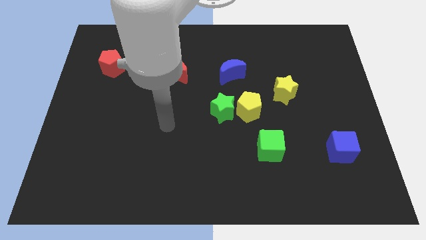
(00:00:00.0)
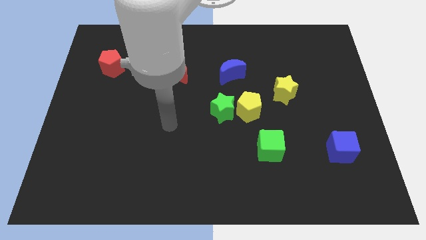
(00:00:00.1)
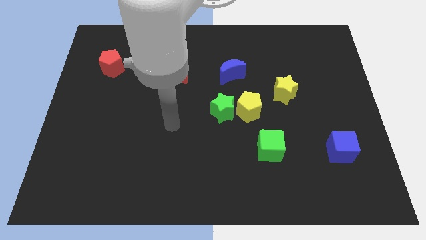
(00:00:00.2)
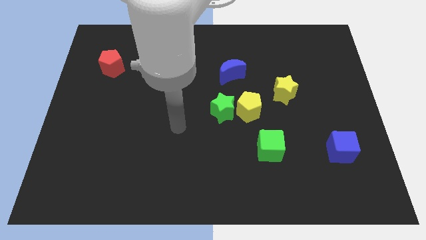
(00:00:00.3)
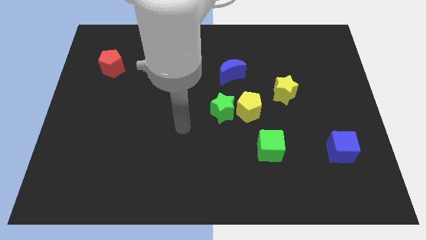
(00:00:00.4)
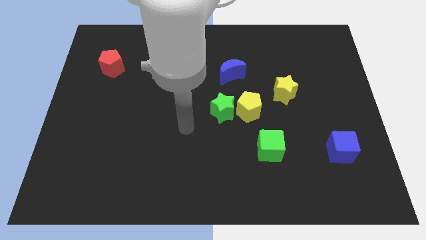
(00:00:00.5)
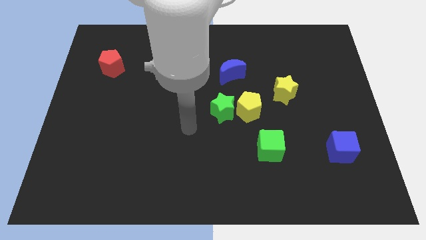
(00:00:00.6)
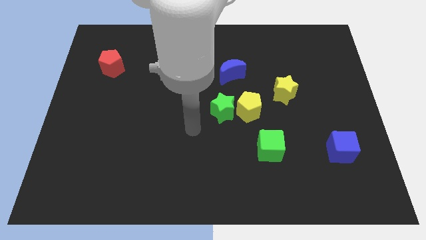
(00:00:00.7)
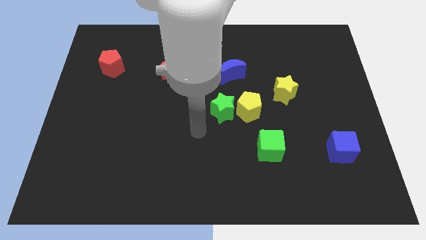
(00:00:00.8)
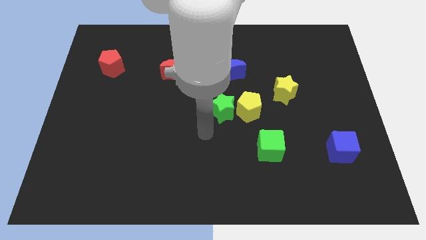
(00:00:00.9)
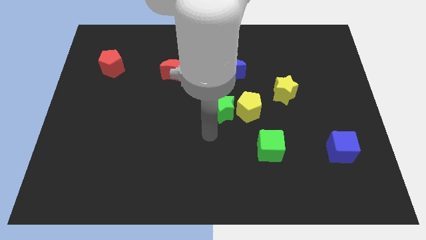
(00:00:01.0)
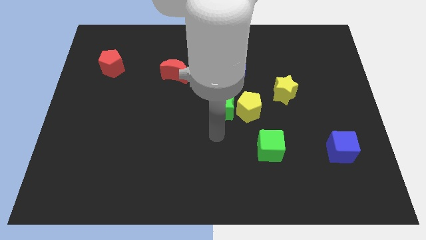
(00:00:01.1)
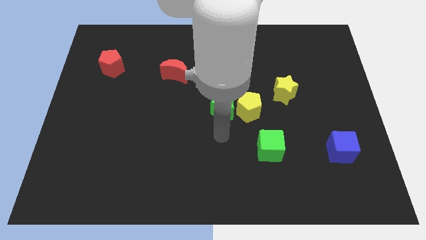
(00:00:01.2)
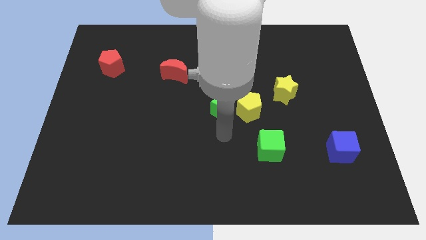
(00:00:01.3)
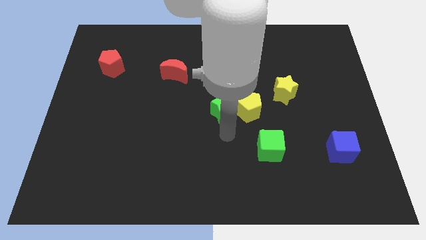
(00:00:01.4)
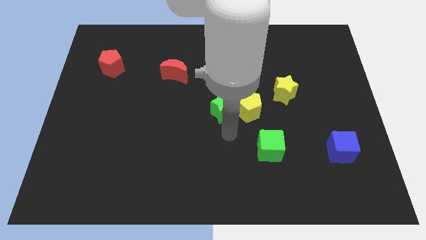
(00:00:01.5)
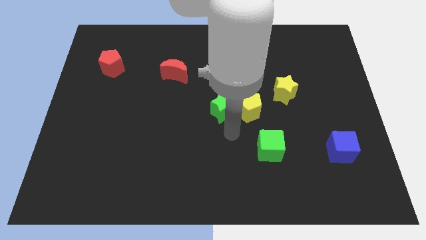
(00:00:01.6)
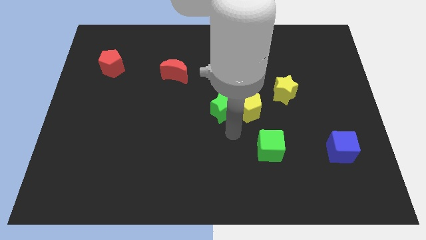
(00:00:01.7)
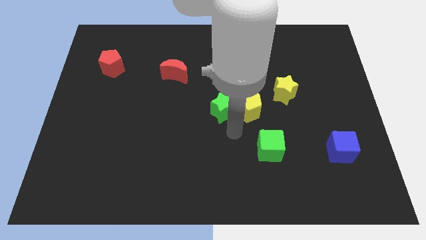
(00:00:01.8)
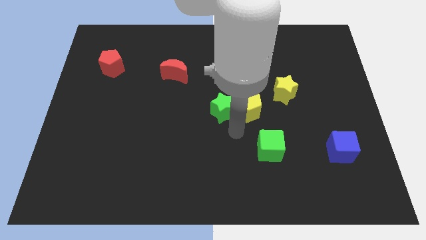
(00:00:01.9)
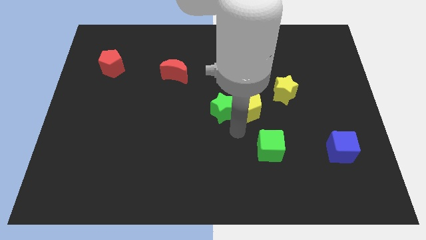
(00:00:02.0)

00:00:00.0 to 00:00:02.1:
move your arm to the bottom of the yellow pentagon

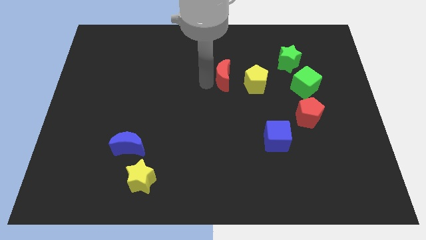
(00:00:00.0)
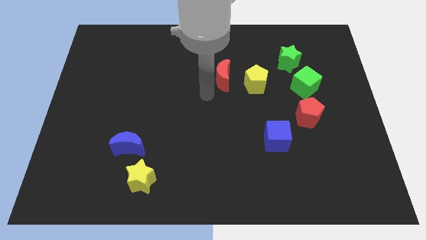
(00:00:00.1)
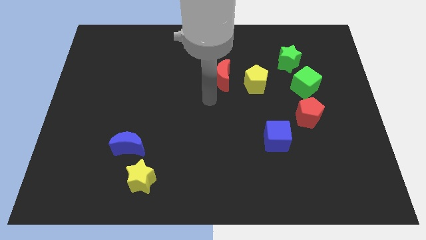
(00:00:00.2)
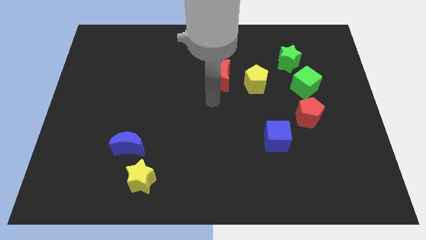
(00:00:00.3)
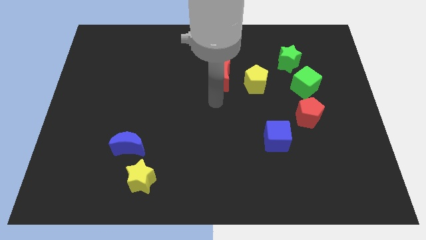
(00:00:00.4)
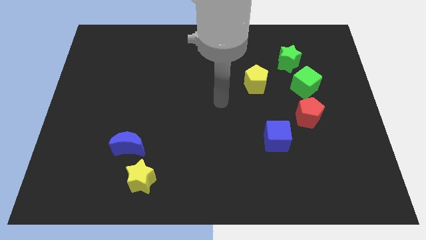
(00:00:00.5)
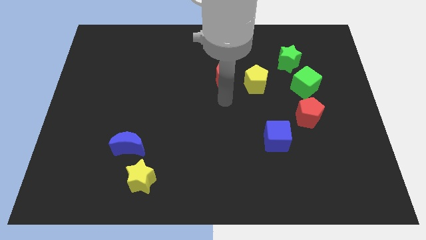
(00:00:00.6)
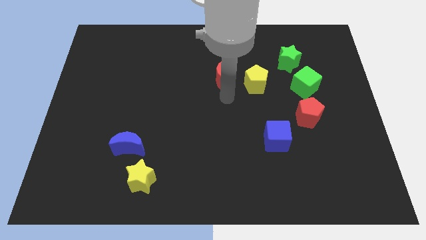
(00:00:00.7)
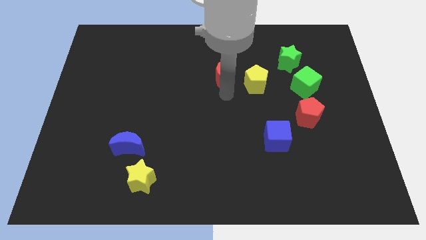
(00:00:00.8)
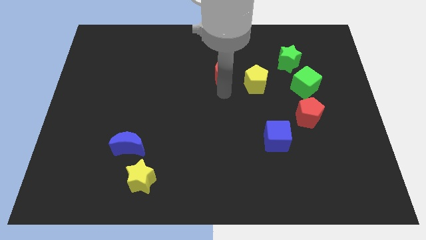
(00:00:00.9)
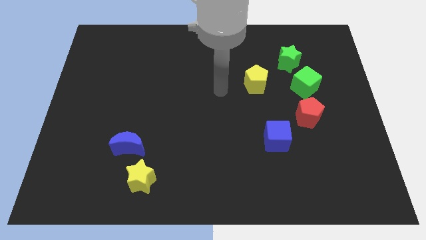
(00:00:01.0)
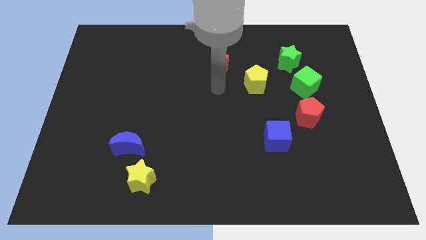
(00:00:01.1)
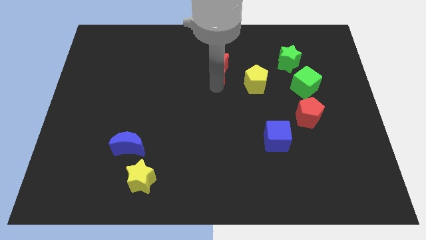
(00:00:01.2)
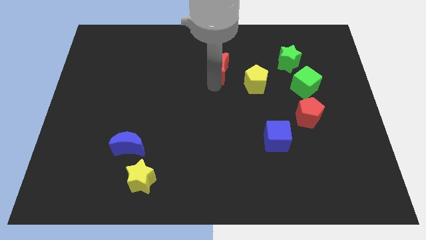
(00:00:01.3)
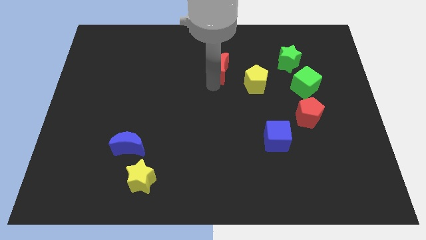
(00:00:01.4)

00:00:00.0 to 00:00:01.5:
slightly move the red crescent diagonal to the left of the green star

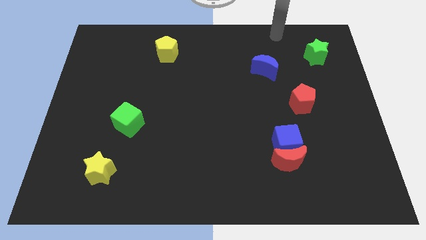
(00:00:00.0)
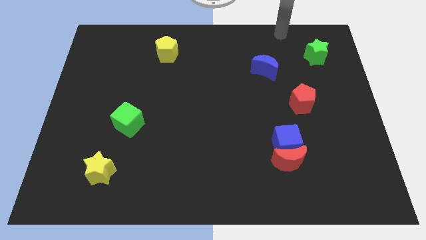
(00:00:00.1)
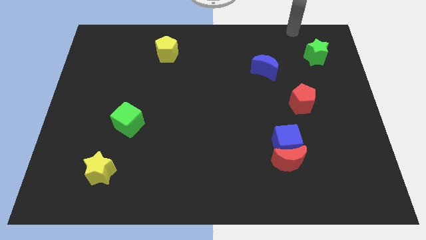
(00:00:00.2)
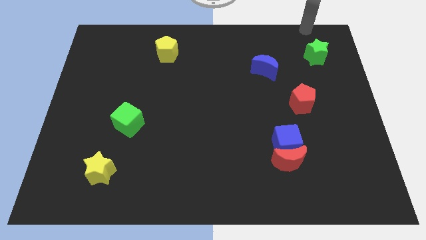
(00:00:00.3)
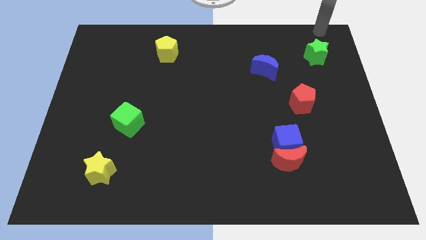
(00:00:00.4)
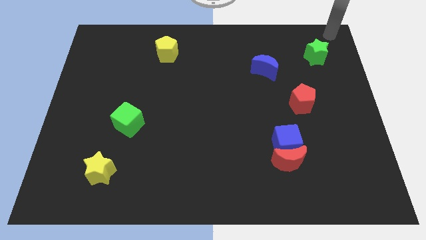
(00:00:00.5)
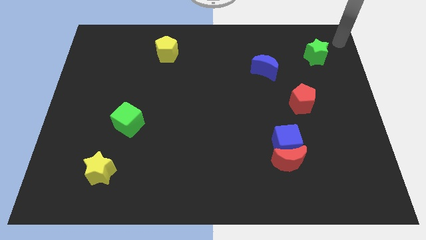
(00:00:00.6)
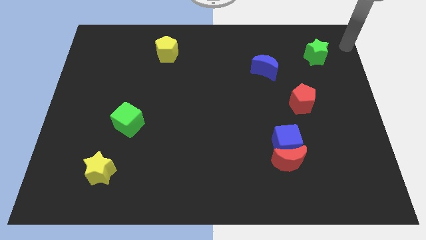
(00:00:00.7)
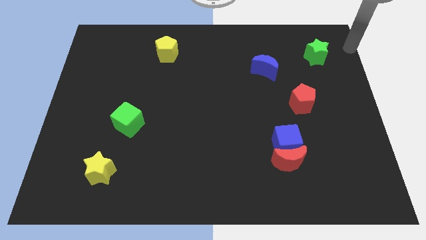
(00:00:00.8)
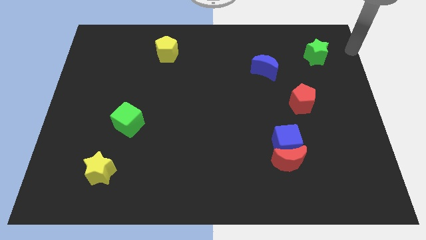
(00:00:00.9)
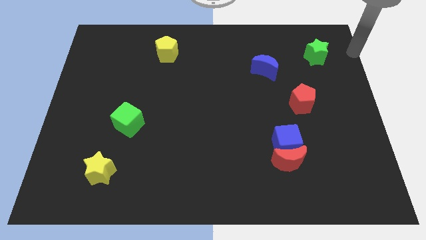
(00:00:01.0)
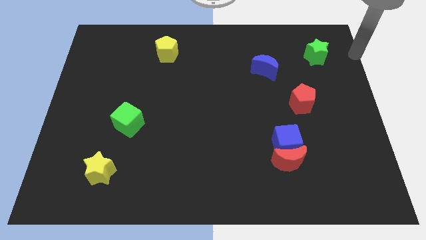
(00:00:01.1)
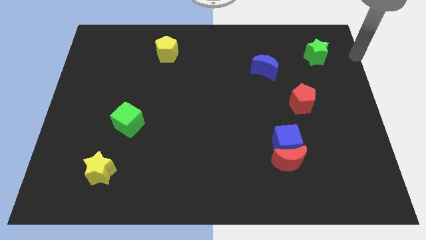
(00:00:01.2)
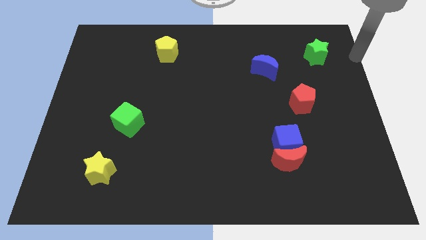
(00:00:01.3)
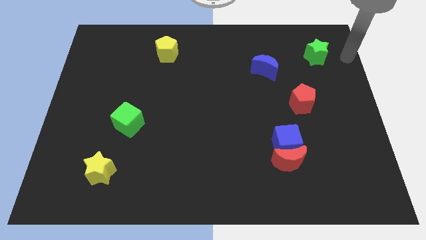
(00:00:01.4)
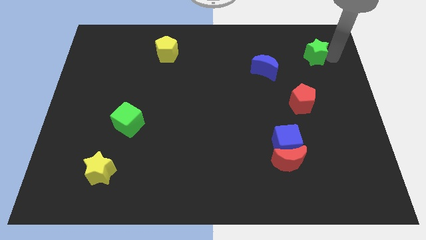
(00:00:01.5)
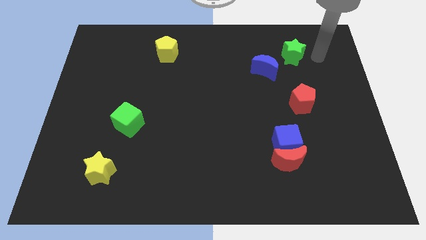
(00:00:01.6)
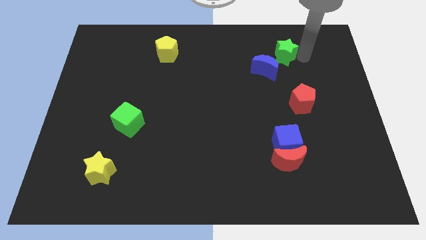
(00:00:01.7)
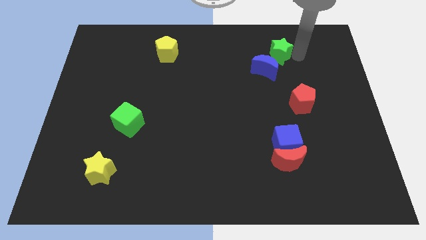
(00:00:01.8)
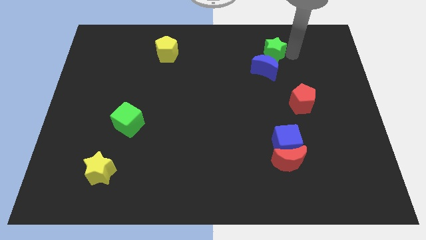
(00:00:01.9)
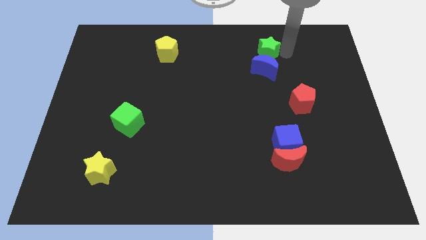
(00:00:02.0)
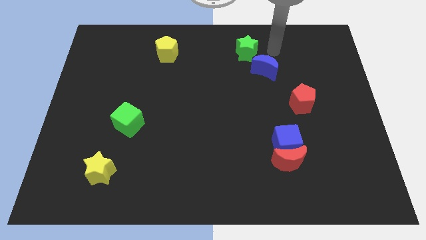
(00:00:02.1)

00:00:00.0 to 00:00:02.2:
move the green star to the top of the blue crescent

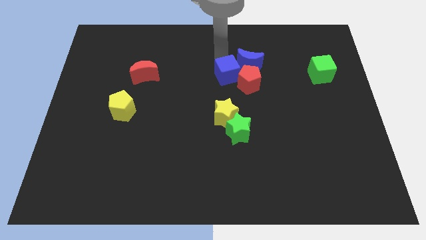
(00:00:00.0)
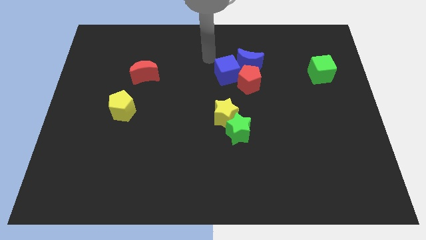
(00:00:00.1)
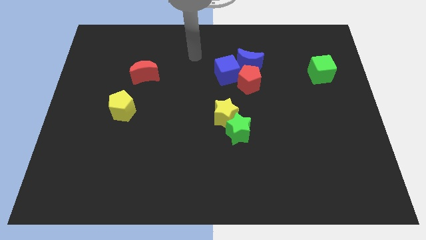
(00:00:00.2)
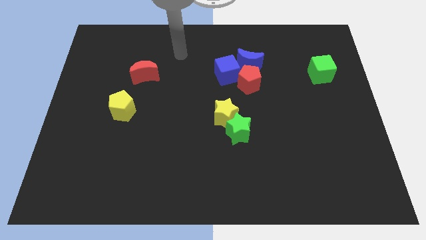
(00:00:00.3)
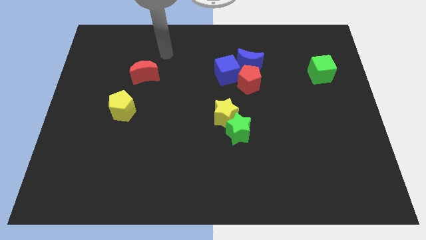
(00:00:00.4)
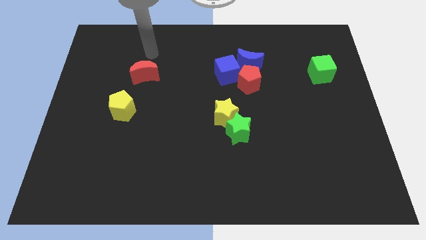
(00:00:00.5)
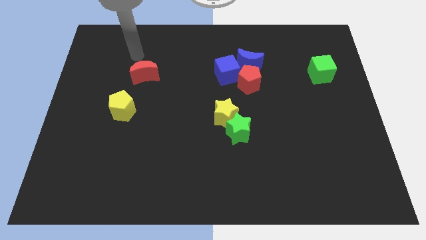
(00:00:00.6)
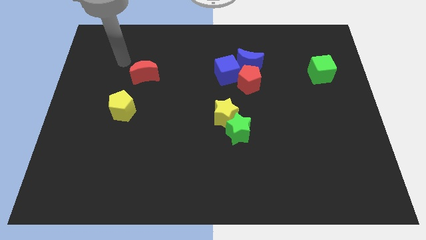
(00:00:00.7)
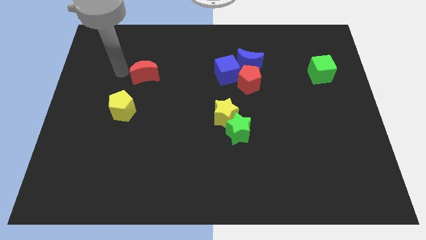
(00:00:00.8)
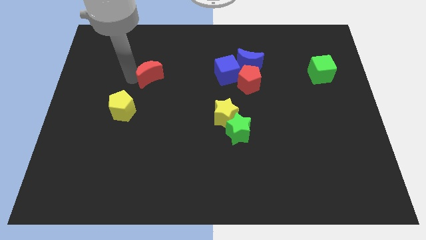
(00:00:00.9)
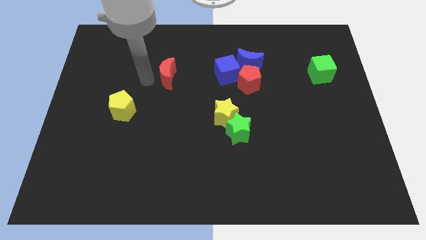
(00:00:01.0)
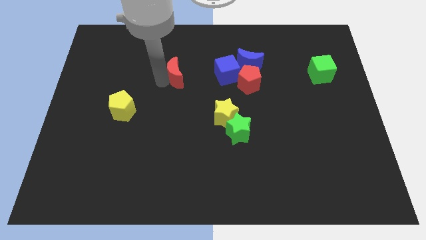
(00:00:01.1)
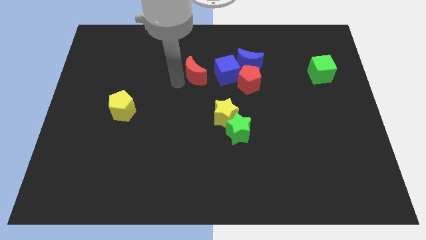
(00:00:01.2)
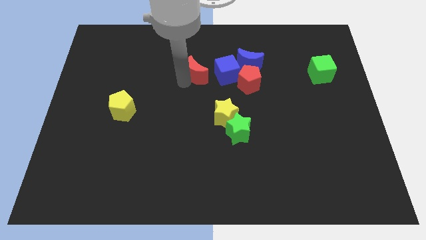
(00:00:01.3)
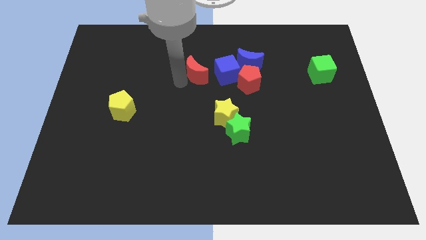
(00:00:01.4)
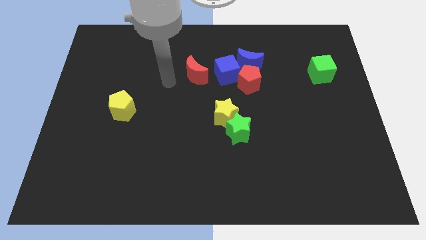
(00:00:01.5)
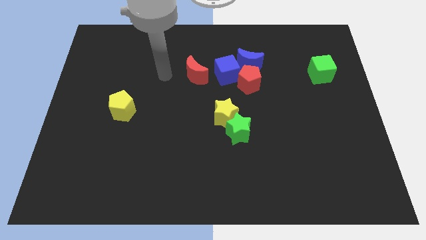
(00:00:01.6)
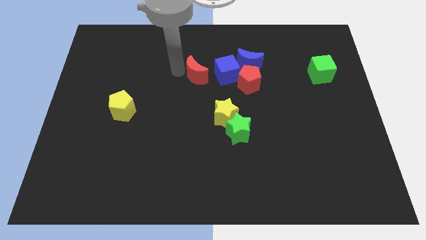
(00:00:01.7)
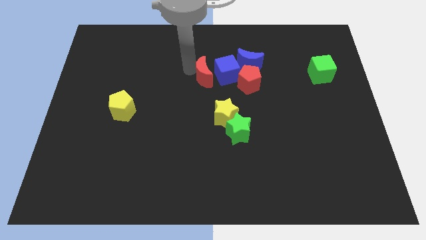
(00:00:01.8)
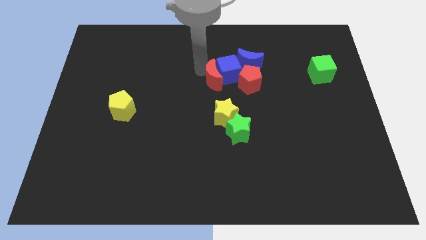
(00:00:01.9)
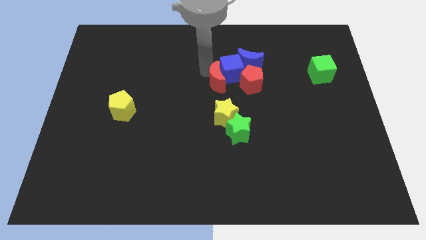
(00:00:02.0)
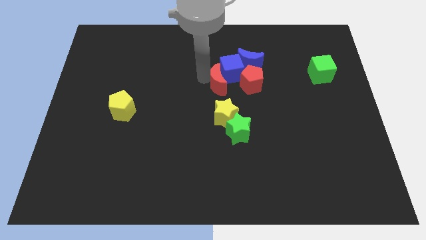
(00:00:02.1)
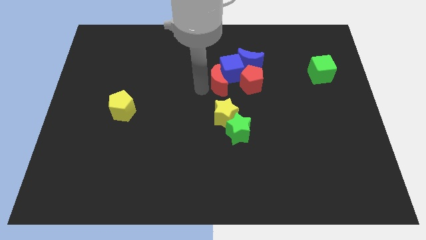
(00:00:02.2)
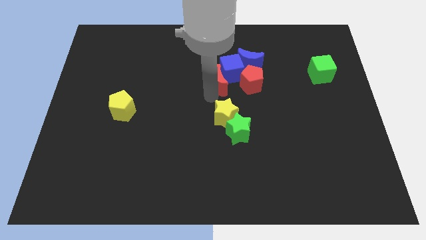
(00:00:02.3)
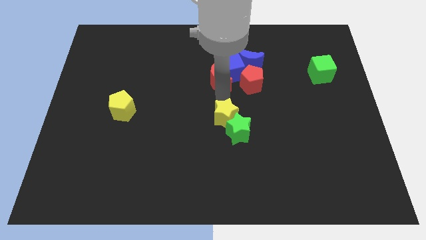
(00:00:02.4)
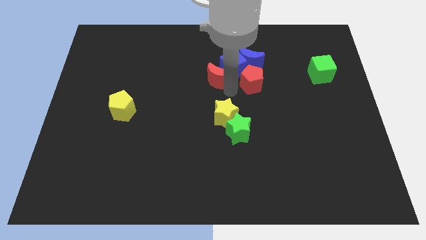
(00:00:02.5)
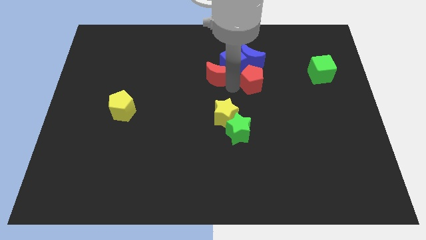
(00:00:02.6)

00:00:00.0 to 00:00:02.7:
push the red crescent into the group of blocks

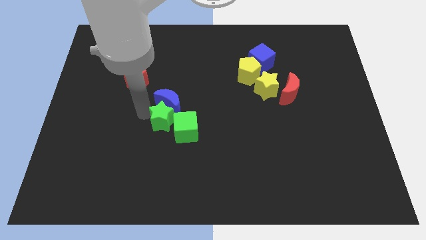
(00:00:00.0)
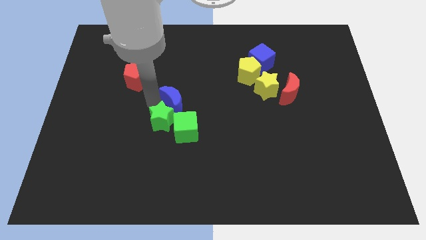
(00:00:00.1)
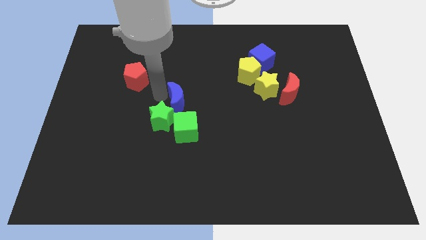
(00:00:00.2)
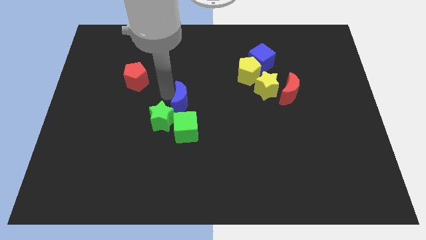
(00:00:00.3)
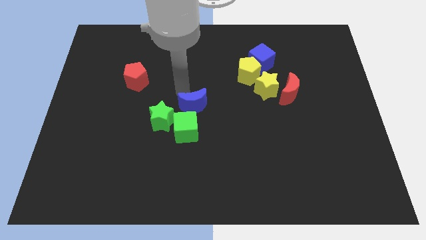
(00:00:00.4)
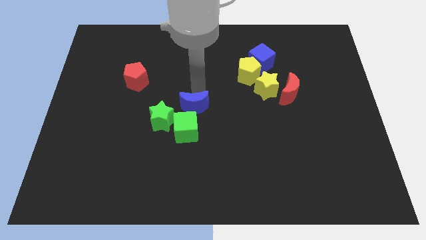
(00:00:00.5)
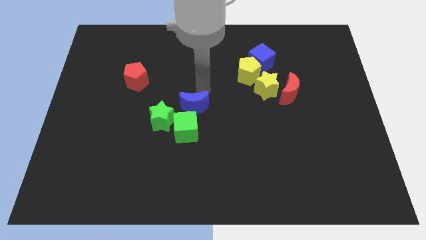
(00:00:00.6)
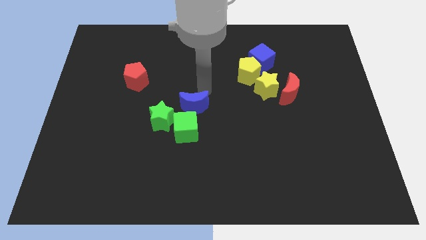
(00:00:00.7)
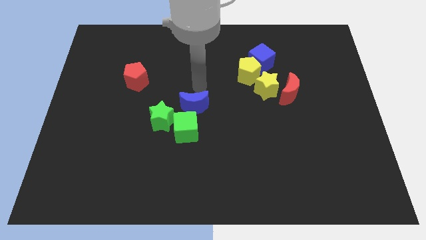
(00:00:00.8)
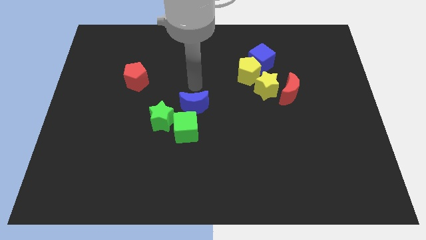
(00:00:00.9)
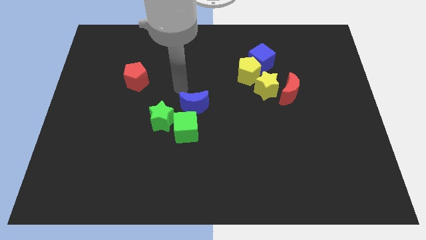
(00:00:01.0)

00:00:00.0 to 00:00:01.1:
push the blue moon to the top of green cube
